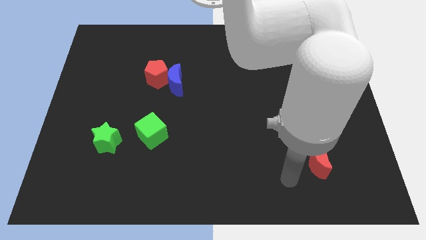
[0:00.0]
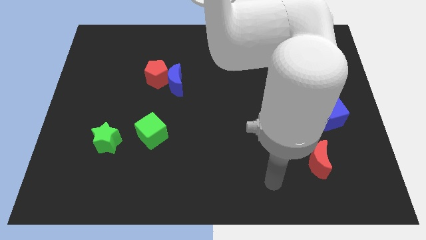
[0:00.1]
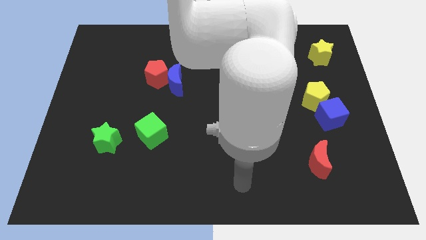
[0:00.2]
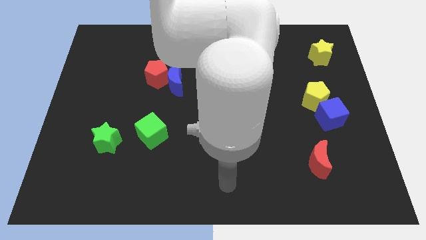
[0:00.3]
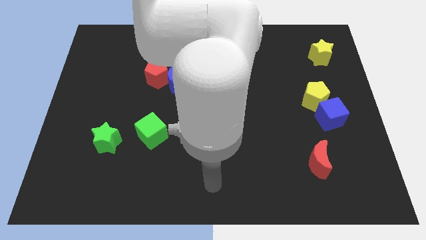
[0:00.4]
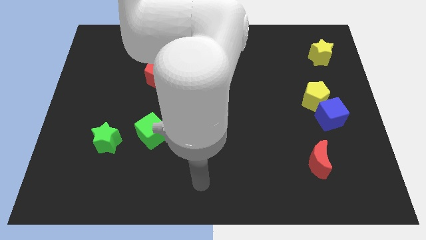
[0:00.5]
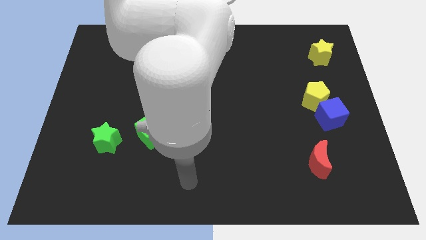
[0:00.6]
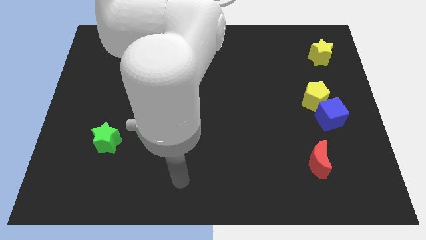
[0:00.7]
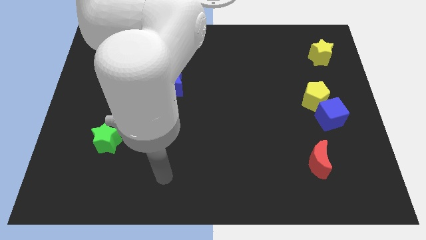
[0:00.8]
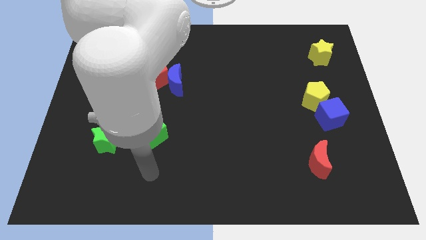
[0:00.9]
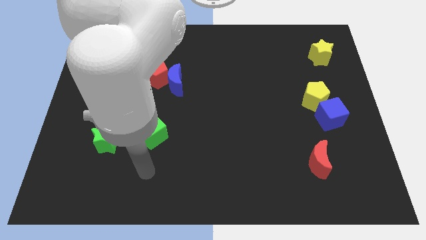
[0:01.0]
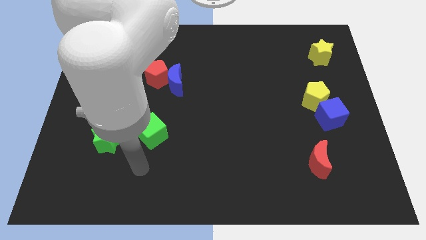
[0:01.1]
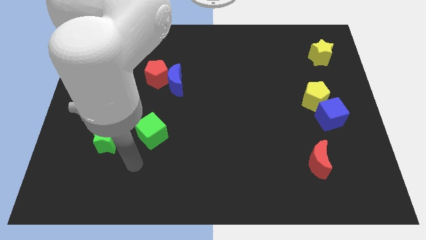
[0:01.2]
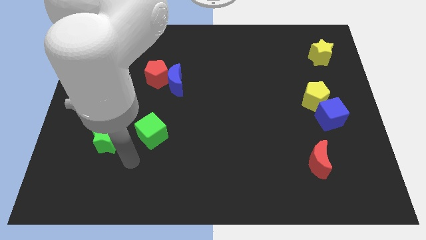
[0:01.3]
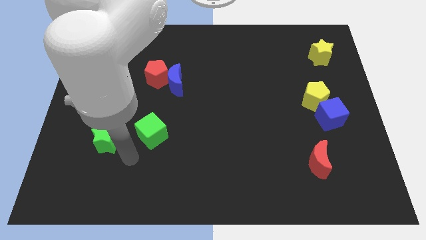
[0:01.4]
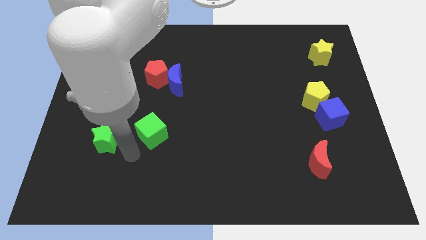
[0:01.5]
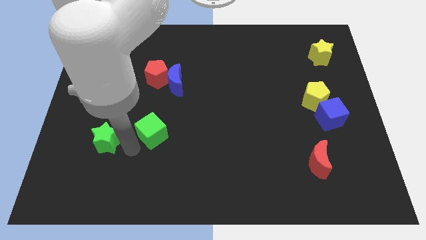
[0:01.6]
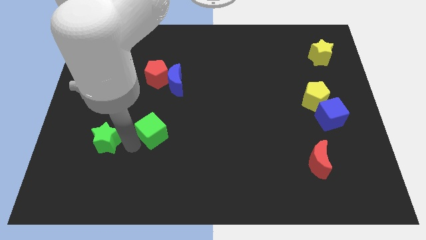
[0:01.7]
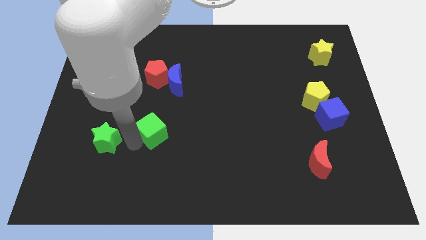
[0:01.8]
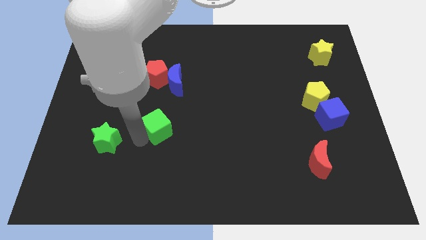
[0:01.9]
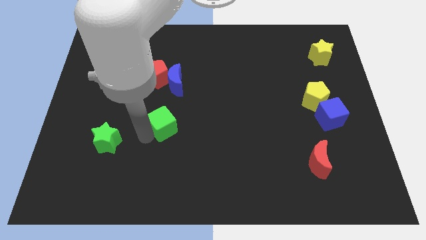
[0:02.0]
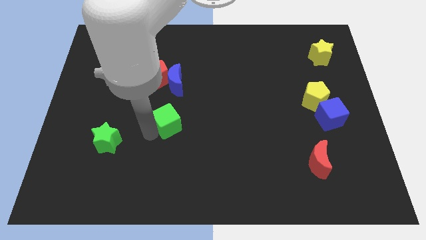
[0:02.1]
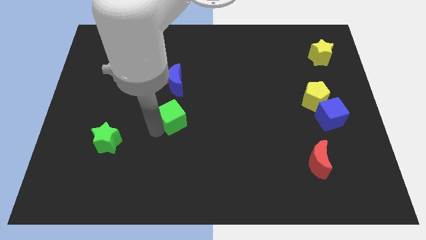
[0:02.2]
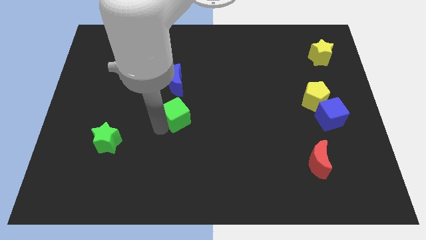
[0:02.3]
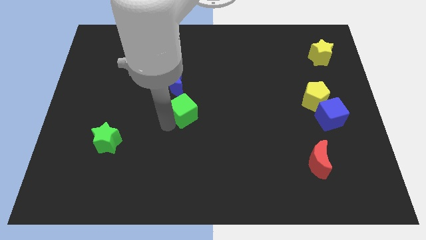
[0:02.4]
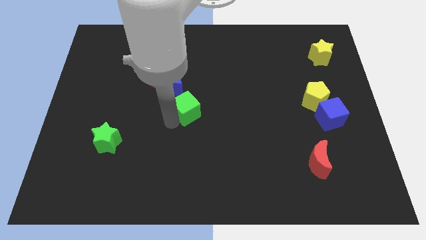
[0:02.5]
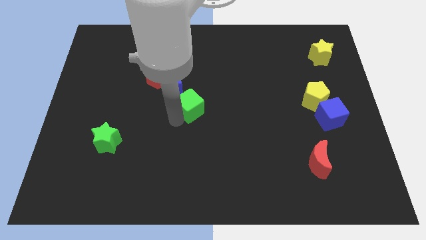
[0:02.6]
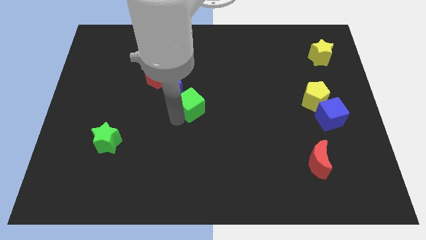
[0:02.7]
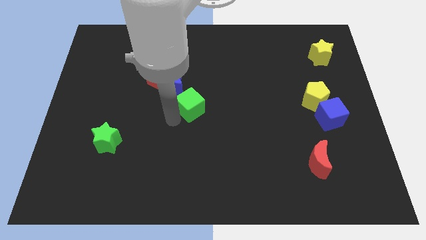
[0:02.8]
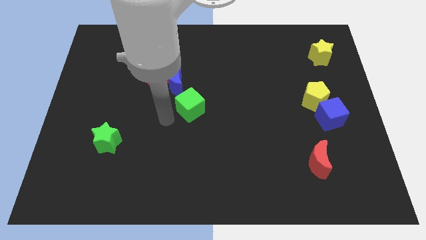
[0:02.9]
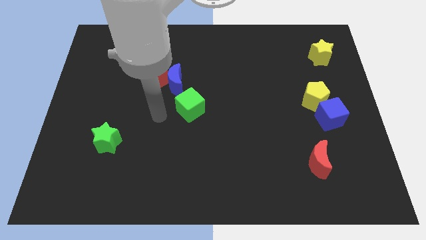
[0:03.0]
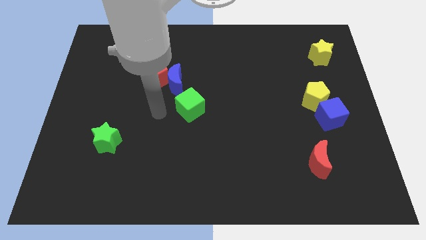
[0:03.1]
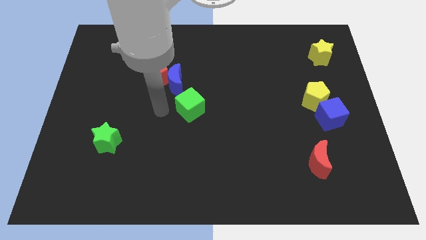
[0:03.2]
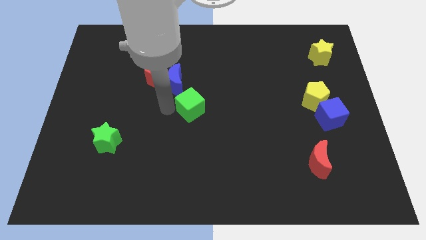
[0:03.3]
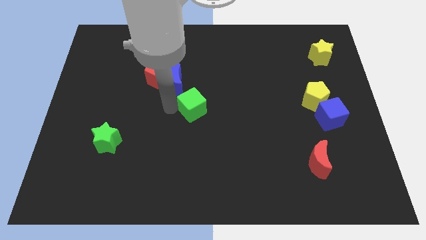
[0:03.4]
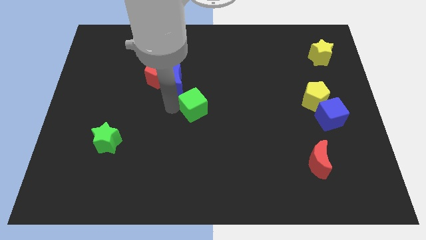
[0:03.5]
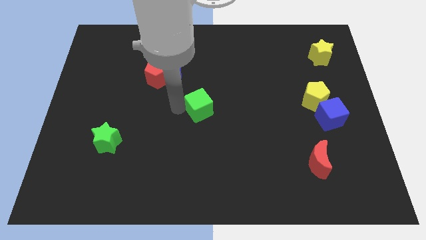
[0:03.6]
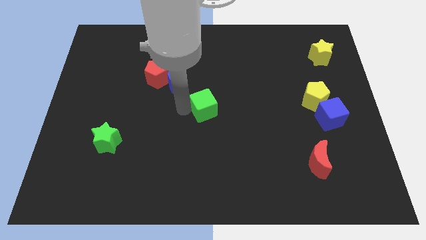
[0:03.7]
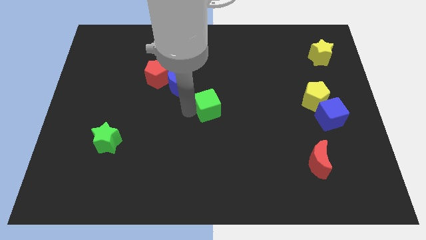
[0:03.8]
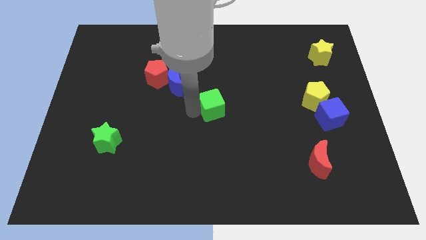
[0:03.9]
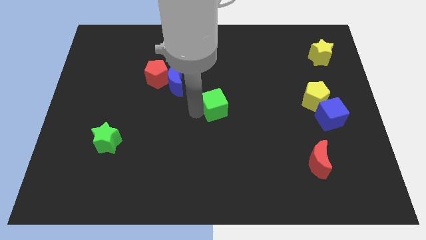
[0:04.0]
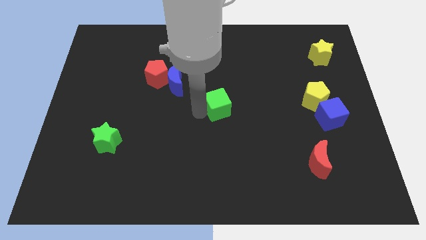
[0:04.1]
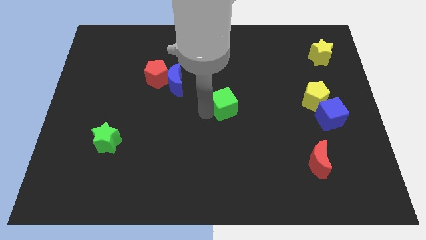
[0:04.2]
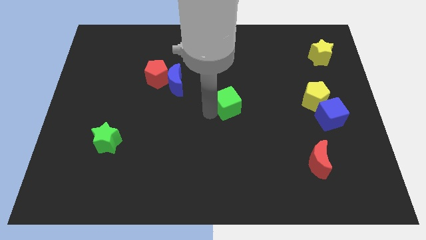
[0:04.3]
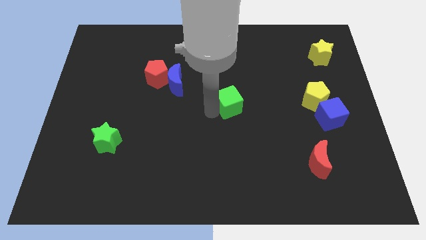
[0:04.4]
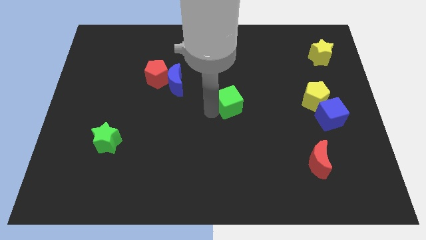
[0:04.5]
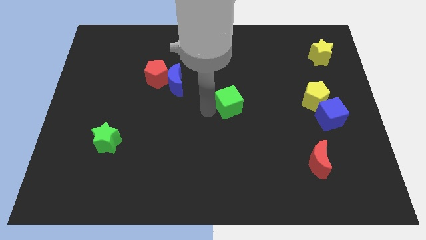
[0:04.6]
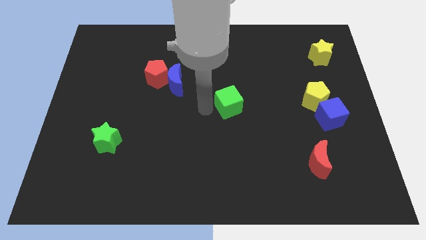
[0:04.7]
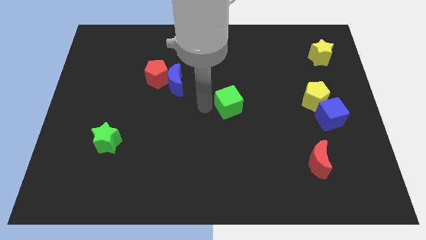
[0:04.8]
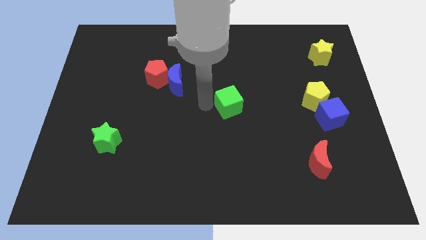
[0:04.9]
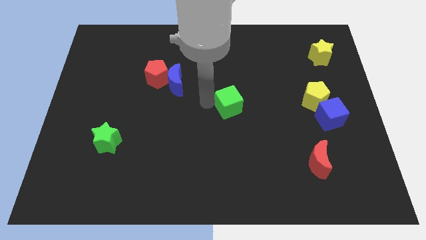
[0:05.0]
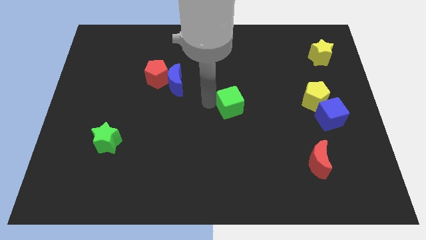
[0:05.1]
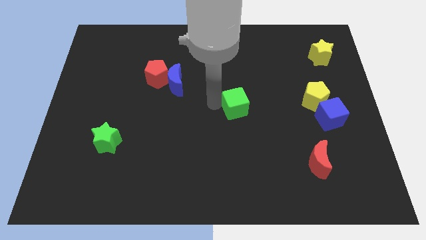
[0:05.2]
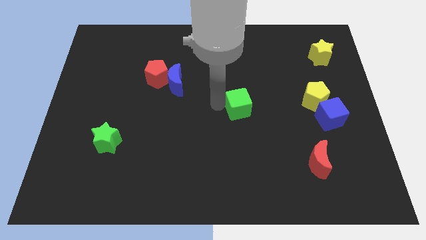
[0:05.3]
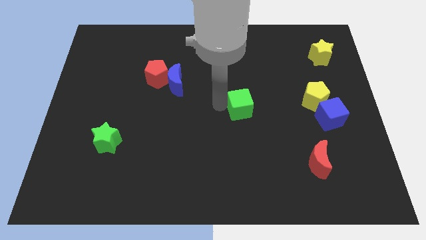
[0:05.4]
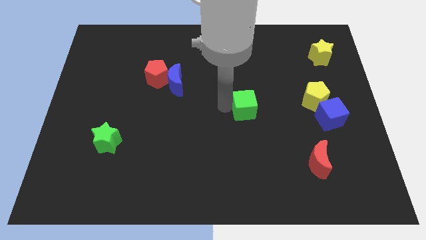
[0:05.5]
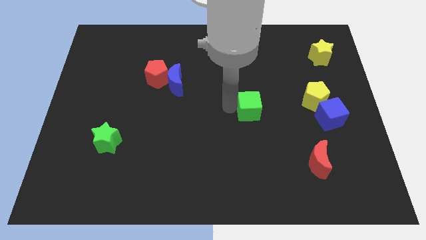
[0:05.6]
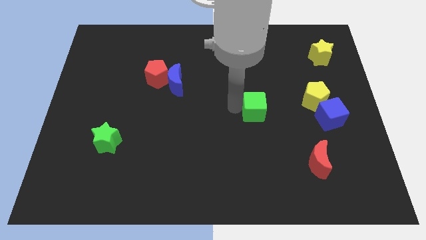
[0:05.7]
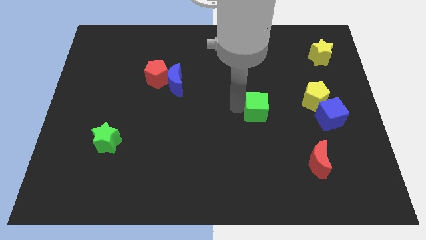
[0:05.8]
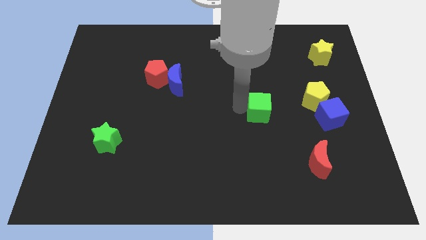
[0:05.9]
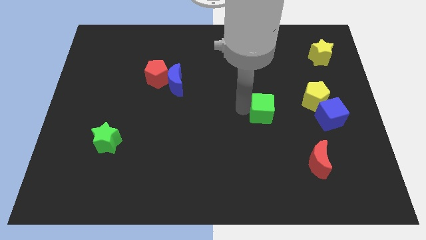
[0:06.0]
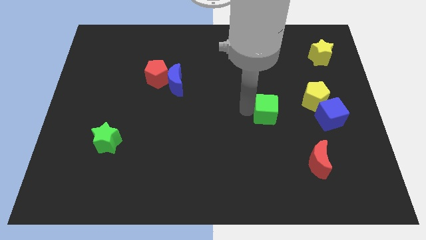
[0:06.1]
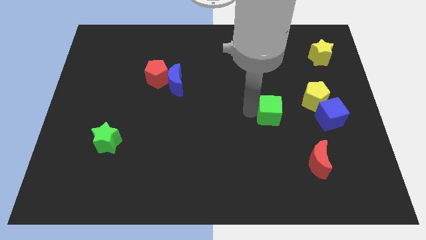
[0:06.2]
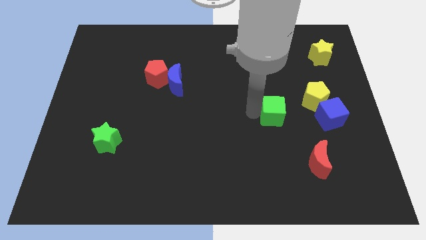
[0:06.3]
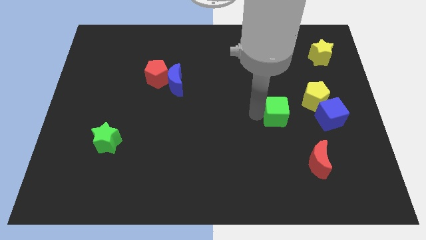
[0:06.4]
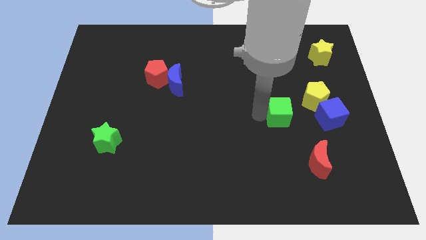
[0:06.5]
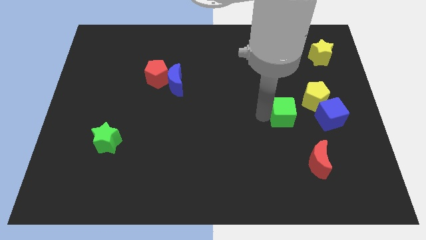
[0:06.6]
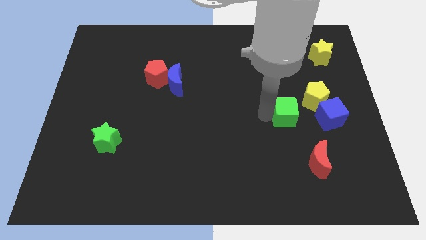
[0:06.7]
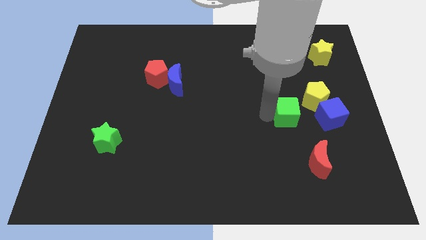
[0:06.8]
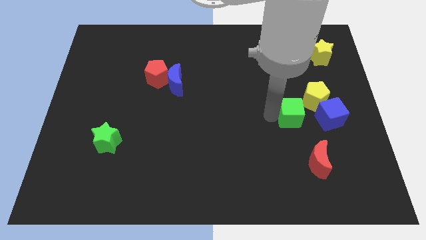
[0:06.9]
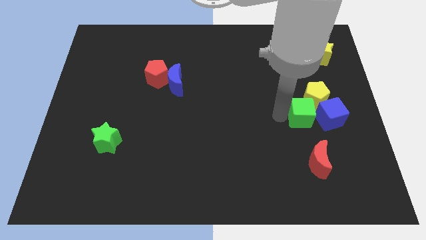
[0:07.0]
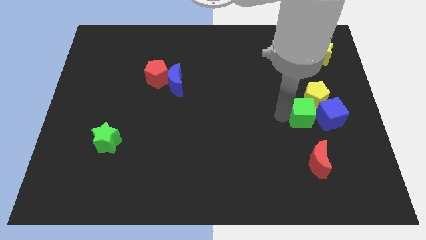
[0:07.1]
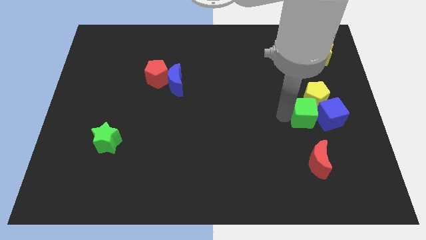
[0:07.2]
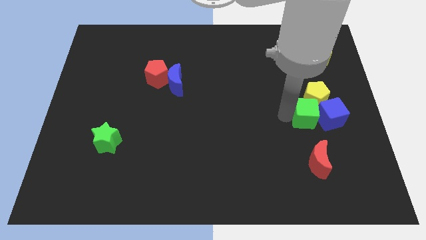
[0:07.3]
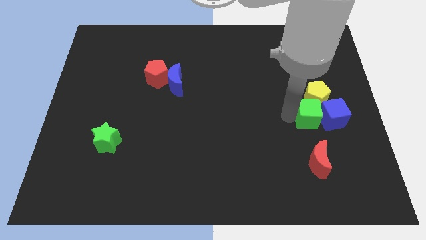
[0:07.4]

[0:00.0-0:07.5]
slide the green cube next to the blue cube

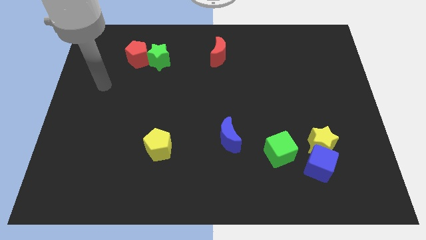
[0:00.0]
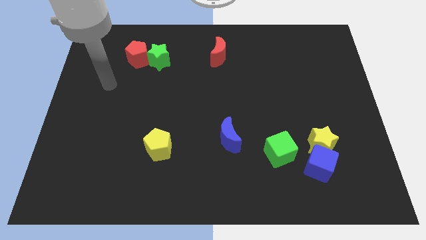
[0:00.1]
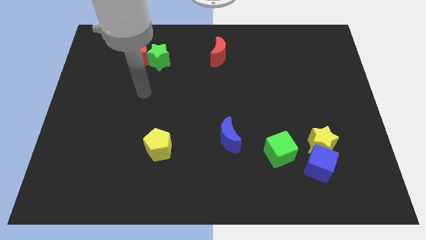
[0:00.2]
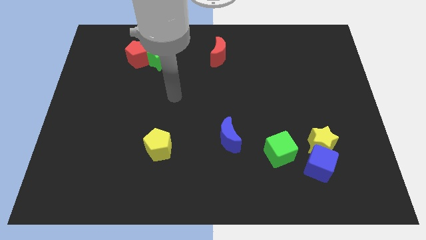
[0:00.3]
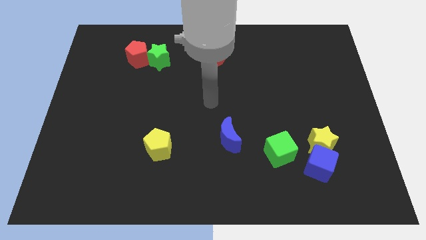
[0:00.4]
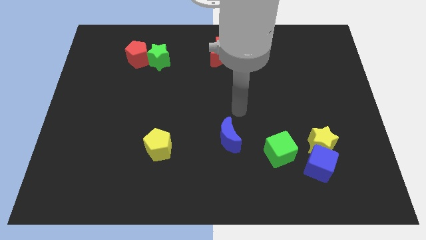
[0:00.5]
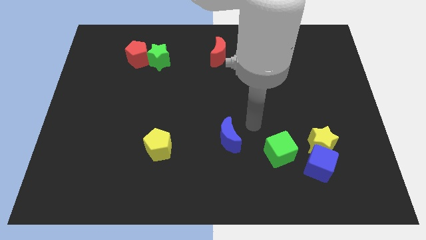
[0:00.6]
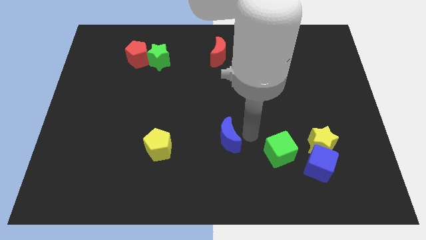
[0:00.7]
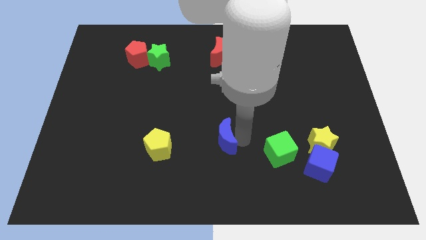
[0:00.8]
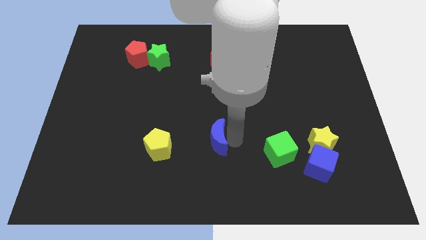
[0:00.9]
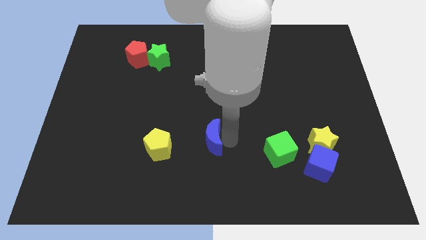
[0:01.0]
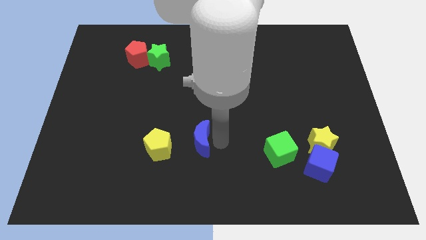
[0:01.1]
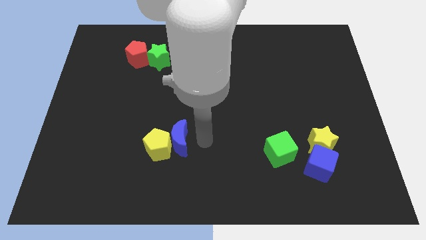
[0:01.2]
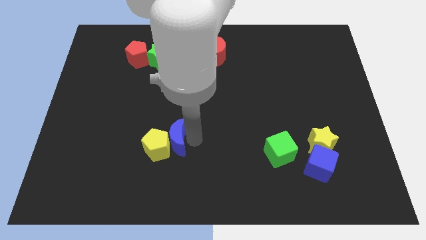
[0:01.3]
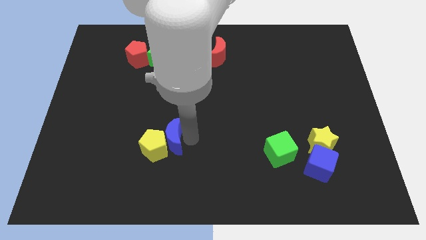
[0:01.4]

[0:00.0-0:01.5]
push the blue moon next to the yellow pentagon
